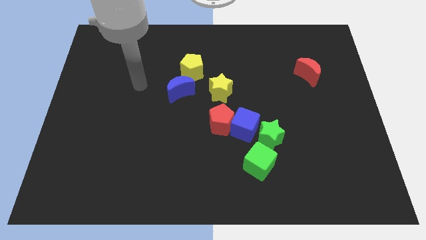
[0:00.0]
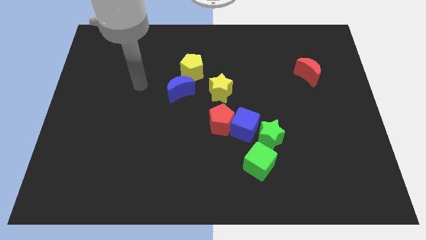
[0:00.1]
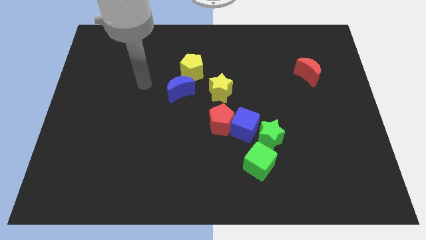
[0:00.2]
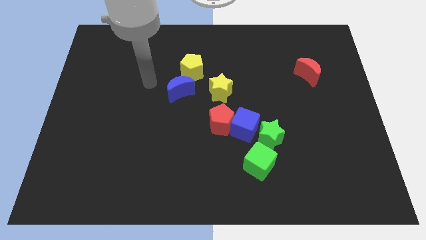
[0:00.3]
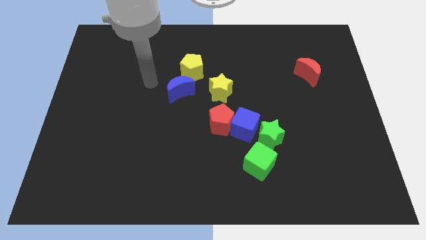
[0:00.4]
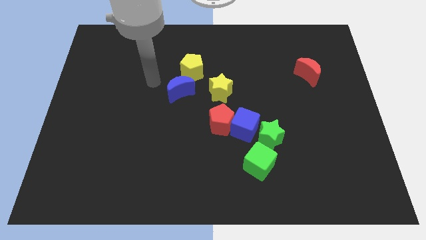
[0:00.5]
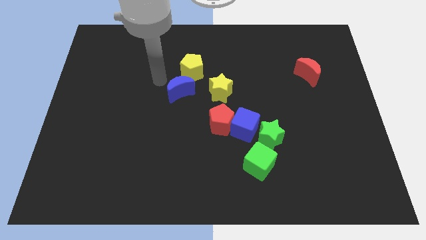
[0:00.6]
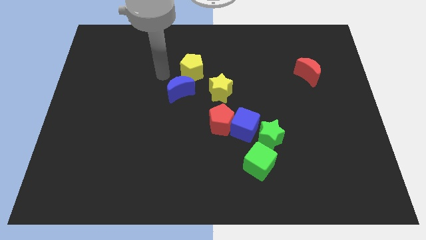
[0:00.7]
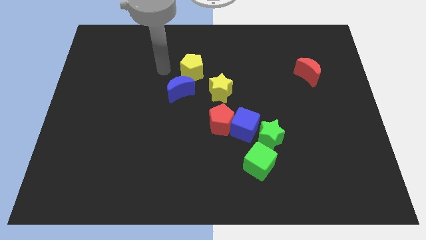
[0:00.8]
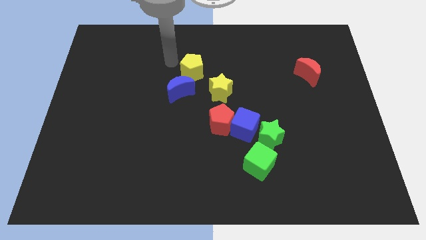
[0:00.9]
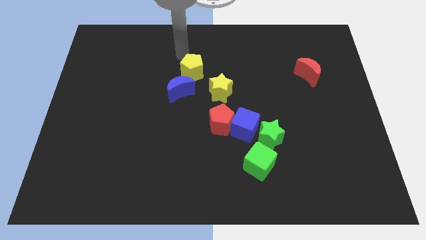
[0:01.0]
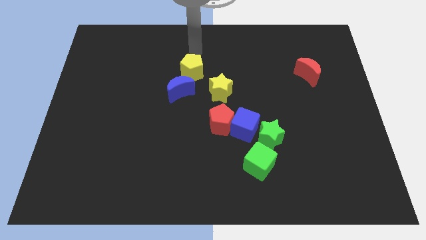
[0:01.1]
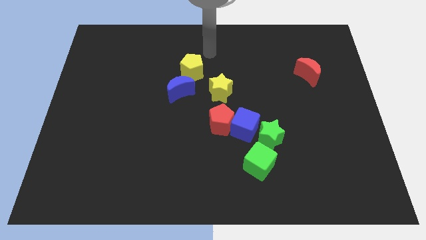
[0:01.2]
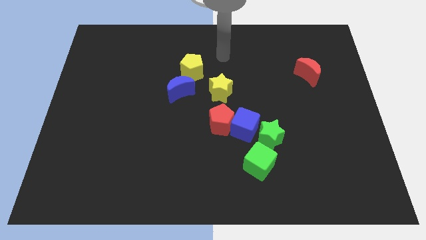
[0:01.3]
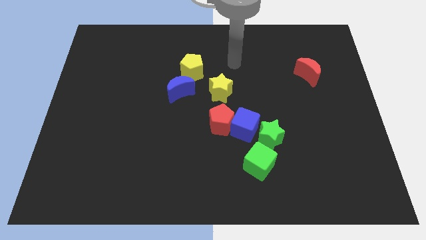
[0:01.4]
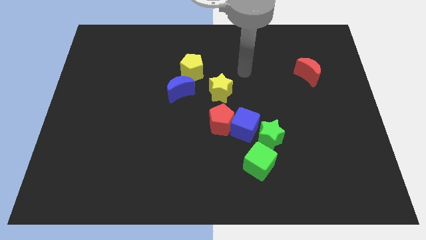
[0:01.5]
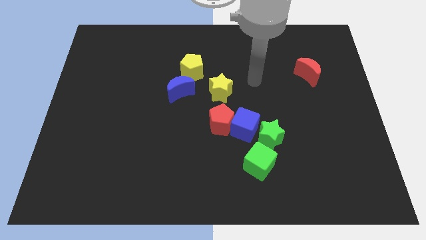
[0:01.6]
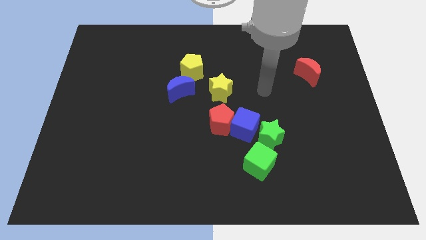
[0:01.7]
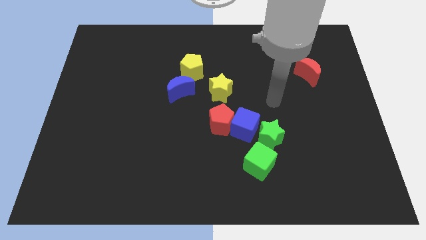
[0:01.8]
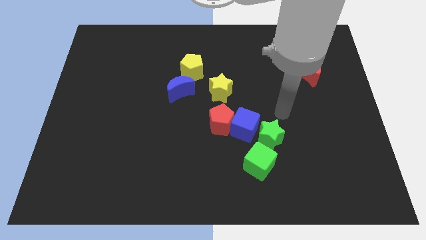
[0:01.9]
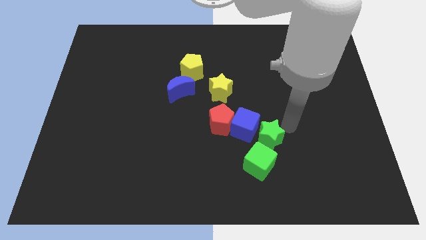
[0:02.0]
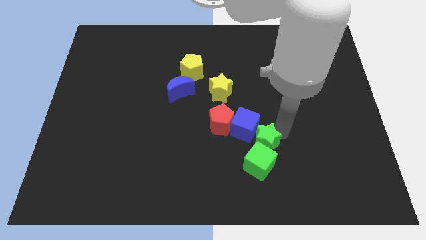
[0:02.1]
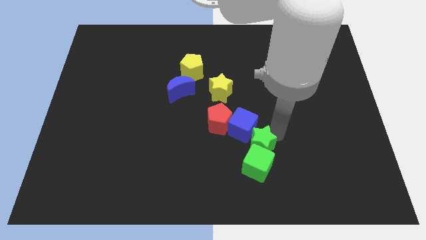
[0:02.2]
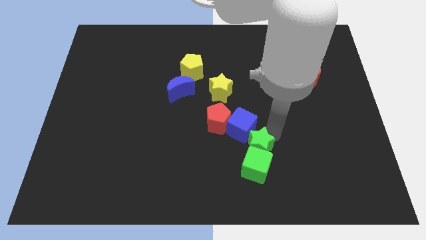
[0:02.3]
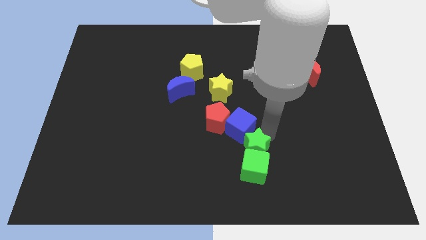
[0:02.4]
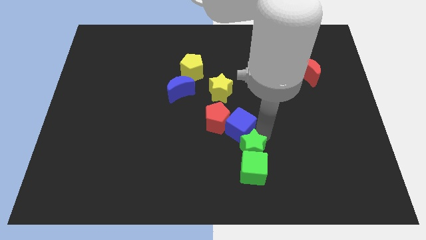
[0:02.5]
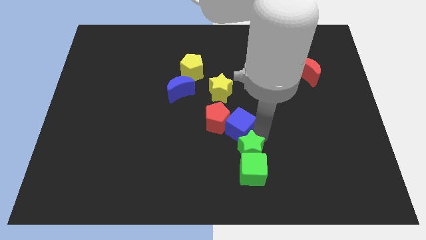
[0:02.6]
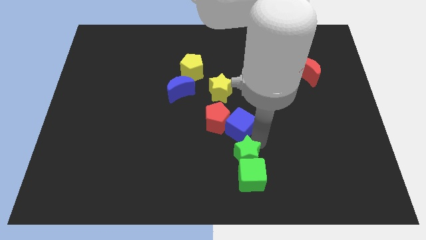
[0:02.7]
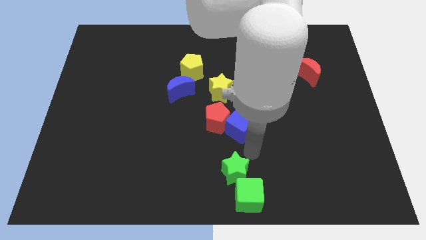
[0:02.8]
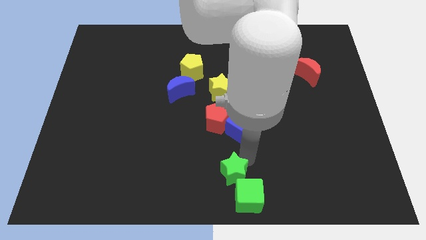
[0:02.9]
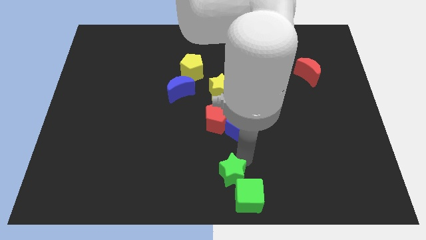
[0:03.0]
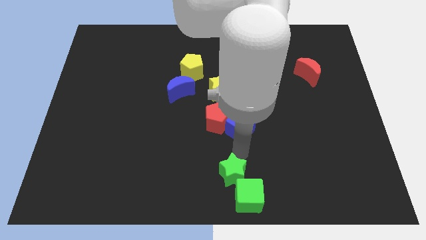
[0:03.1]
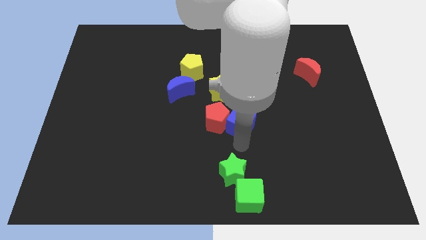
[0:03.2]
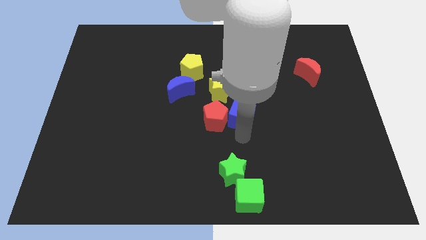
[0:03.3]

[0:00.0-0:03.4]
separate green star from the blue cube

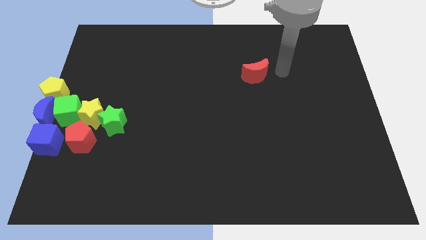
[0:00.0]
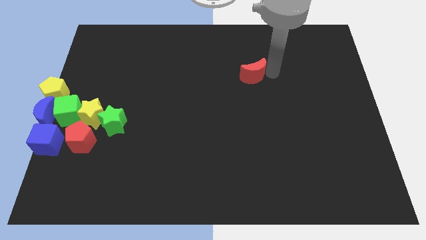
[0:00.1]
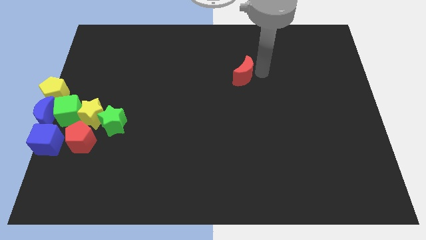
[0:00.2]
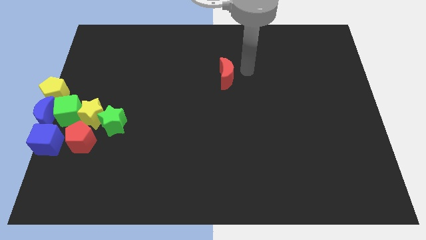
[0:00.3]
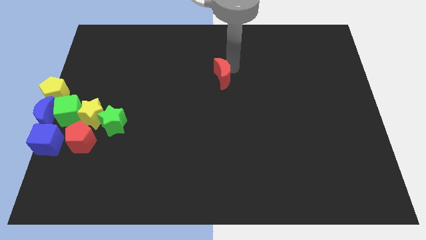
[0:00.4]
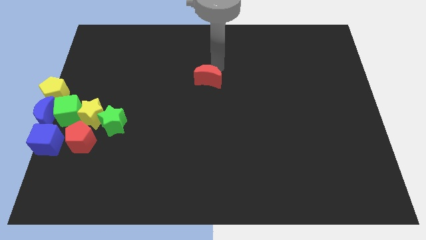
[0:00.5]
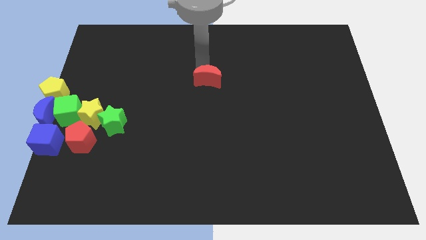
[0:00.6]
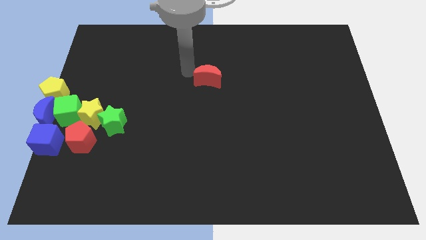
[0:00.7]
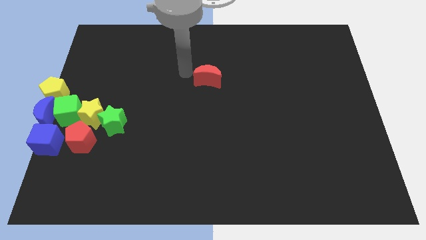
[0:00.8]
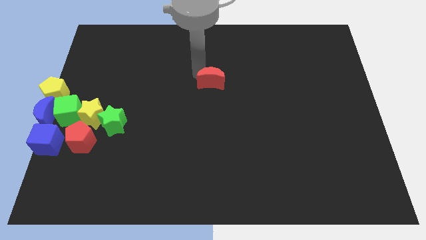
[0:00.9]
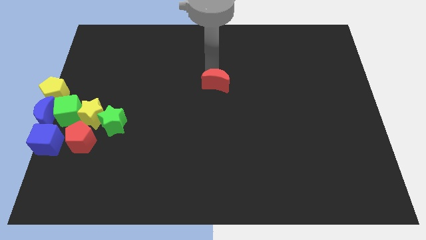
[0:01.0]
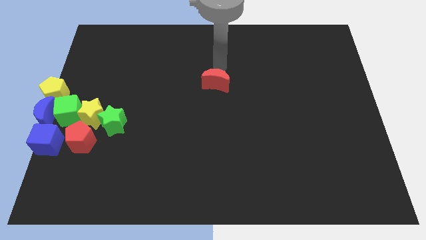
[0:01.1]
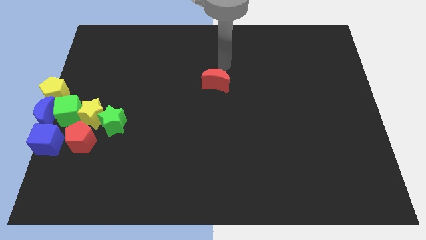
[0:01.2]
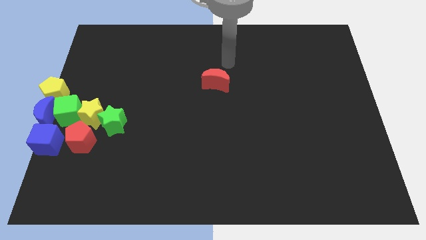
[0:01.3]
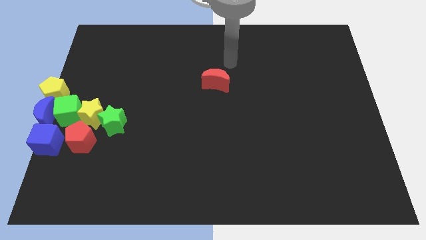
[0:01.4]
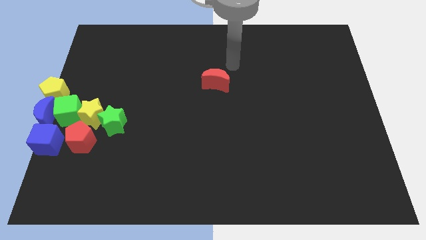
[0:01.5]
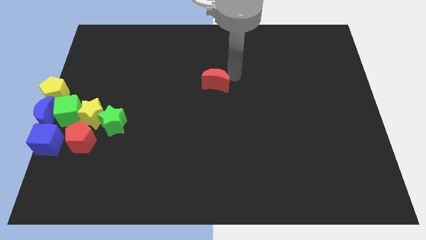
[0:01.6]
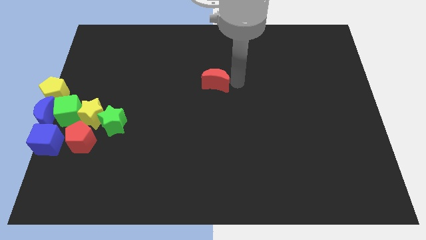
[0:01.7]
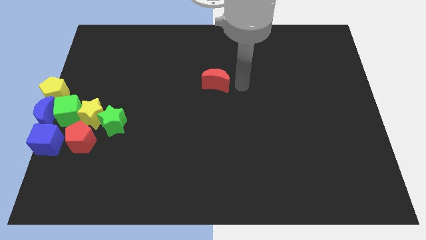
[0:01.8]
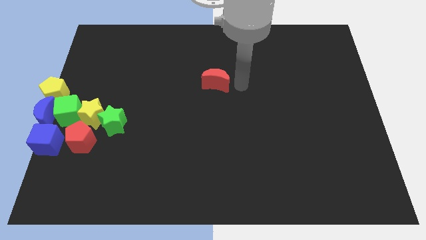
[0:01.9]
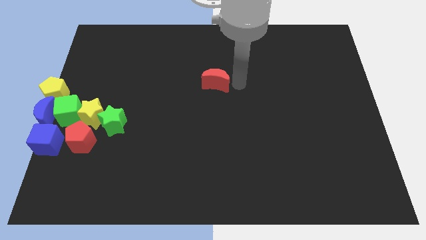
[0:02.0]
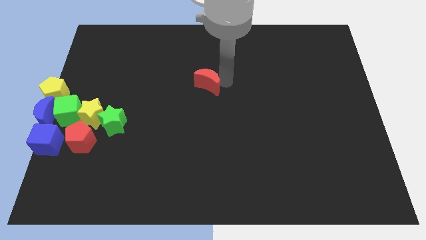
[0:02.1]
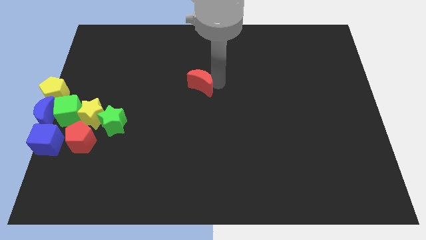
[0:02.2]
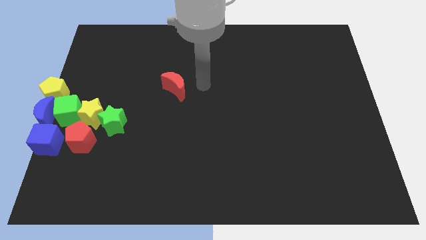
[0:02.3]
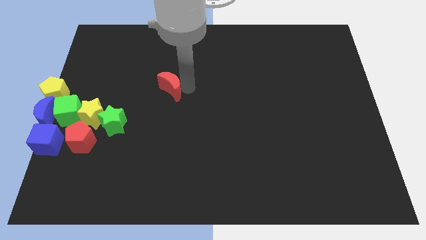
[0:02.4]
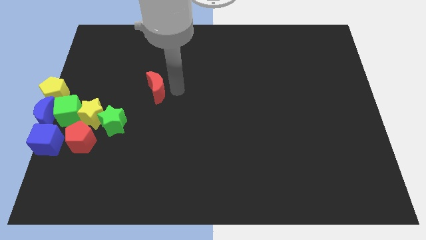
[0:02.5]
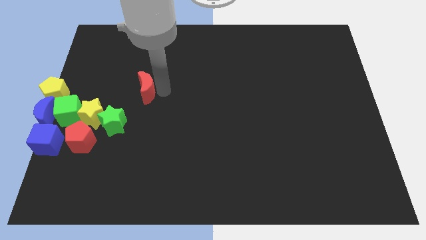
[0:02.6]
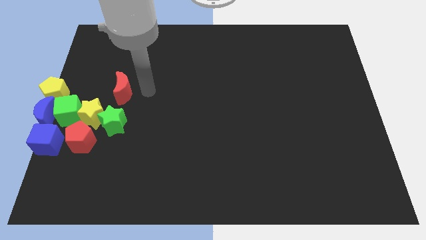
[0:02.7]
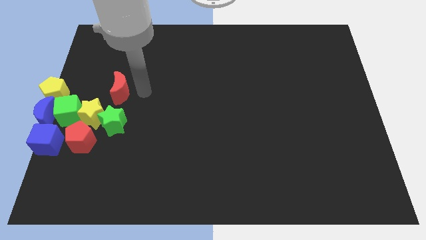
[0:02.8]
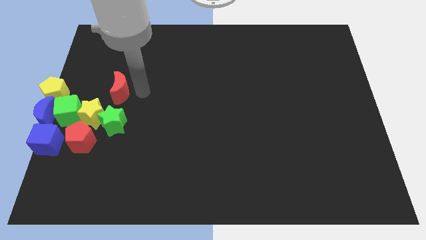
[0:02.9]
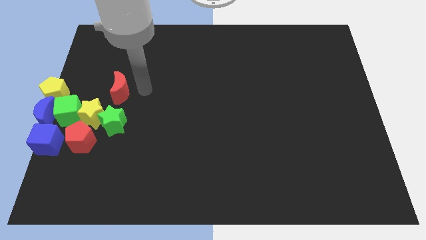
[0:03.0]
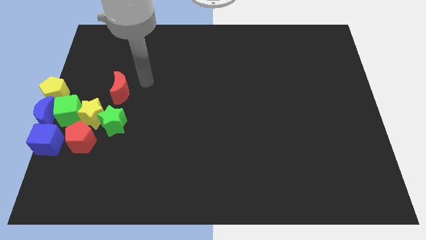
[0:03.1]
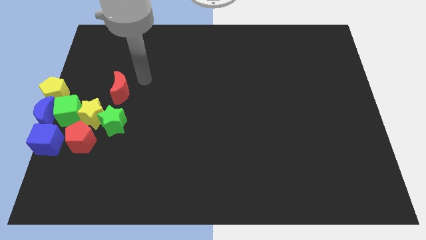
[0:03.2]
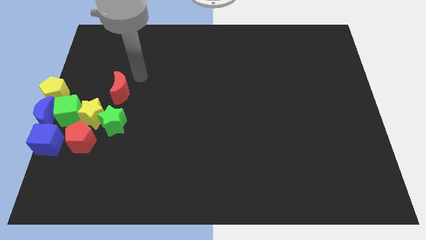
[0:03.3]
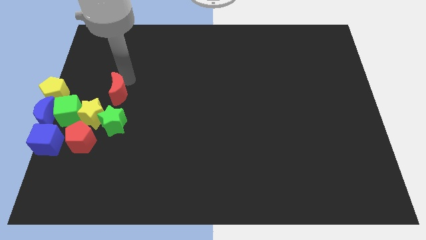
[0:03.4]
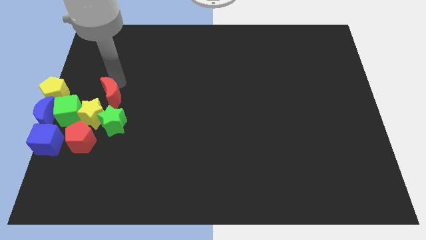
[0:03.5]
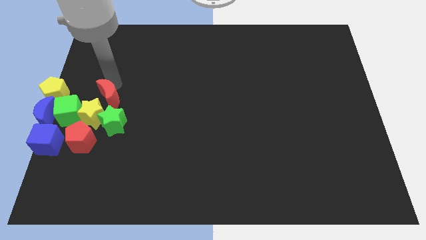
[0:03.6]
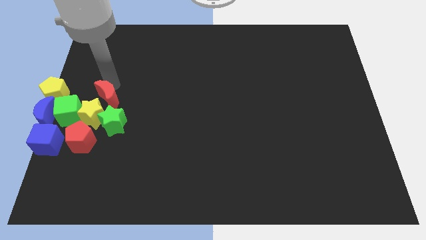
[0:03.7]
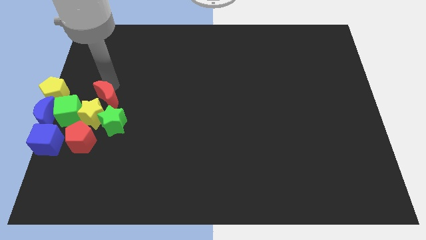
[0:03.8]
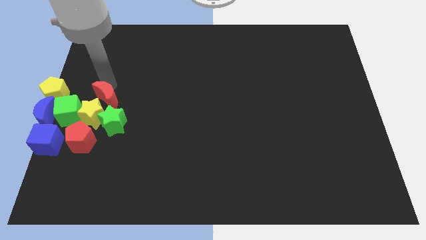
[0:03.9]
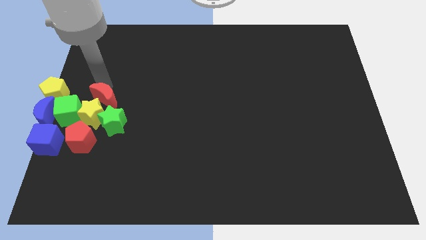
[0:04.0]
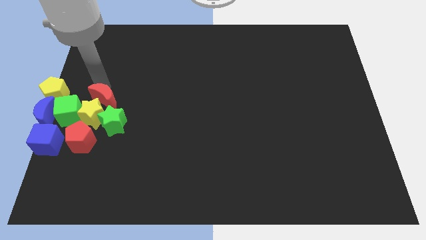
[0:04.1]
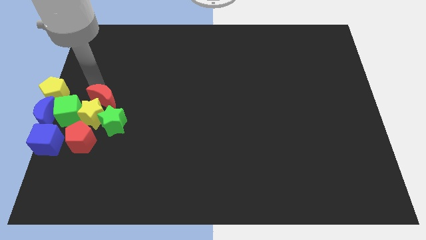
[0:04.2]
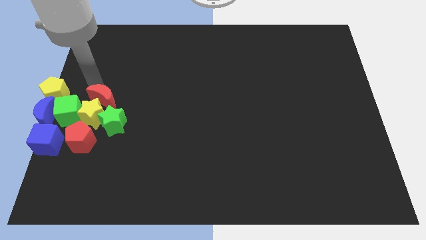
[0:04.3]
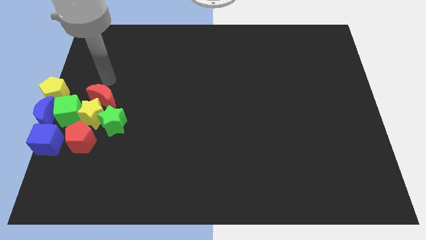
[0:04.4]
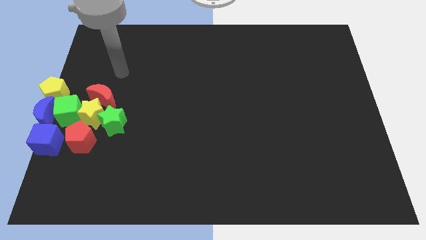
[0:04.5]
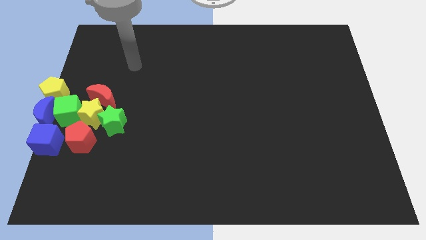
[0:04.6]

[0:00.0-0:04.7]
move the red moon into a group of blocks

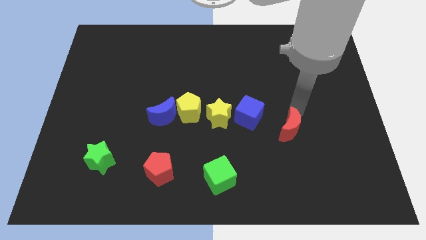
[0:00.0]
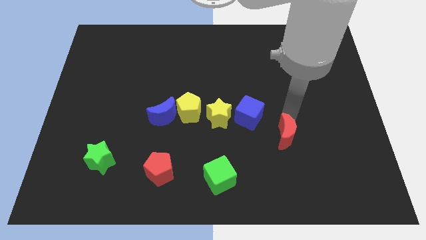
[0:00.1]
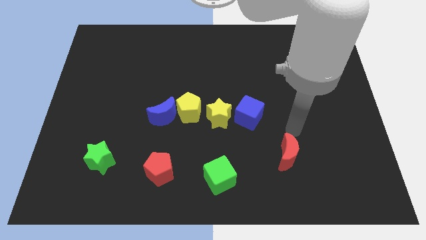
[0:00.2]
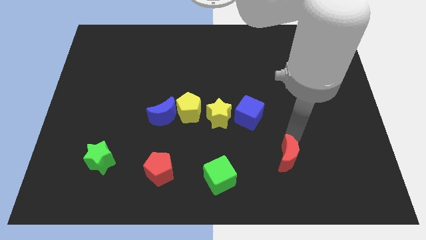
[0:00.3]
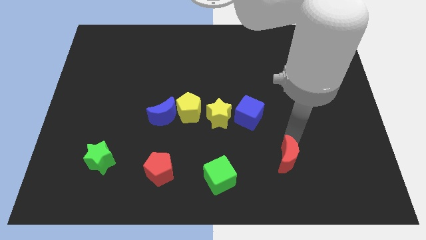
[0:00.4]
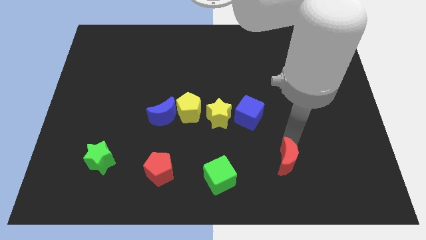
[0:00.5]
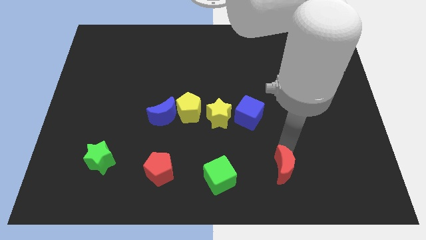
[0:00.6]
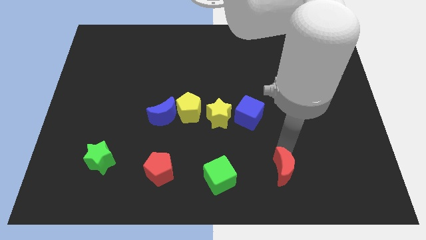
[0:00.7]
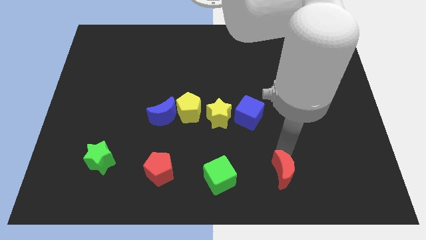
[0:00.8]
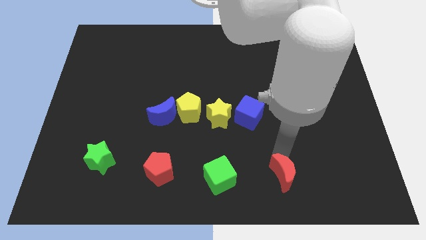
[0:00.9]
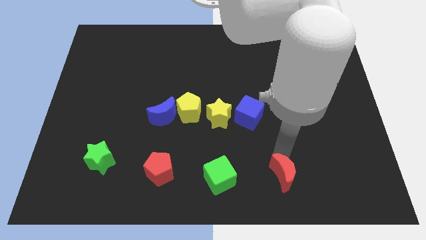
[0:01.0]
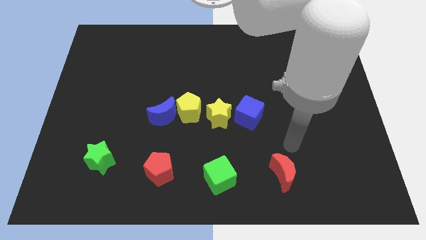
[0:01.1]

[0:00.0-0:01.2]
move the red crescent to the right of the green cube
